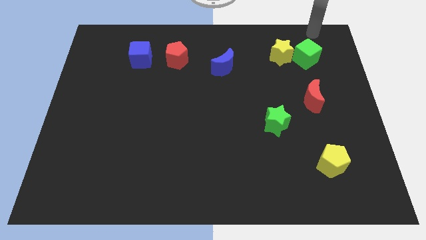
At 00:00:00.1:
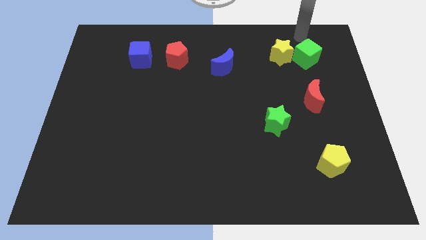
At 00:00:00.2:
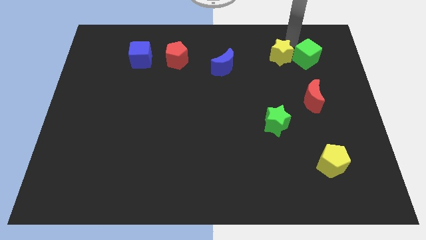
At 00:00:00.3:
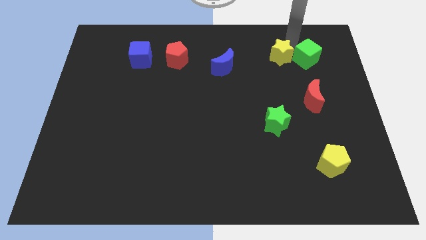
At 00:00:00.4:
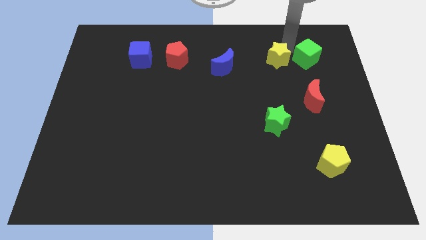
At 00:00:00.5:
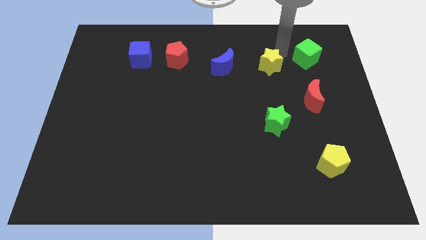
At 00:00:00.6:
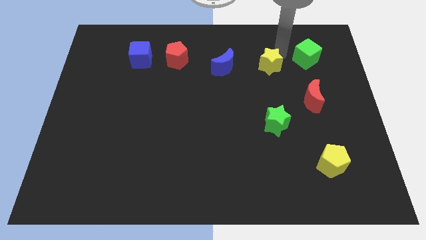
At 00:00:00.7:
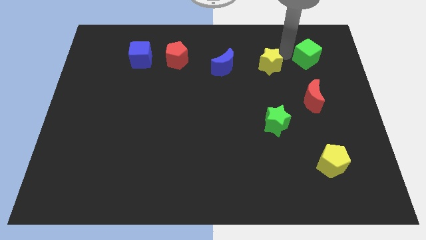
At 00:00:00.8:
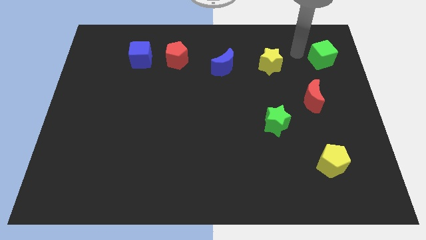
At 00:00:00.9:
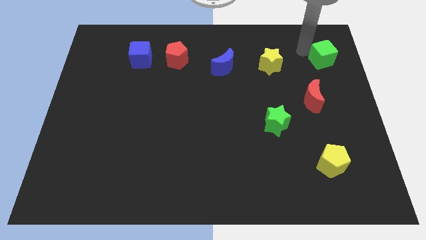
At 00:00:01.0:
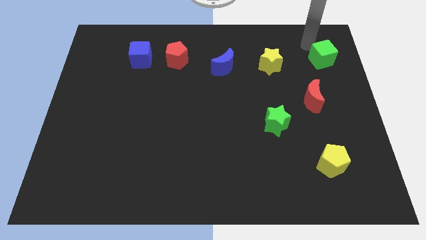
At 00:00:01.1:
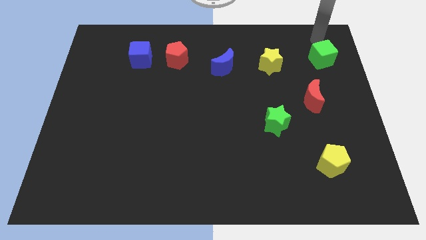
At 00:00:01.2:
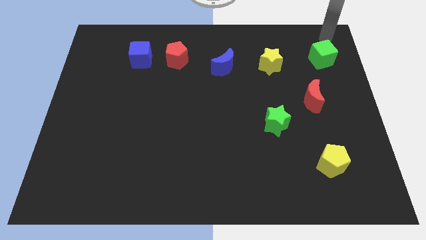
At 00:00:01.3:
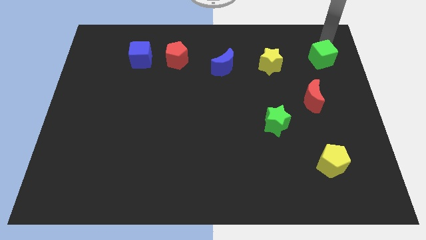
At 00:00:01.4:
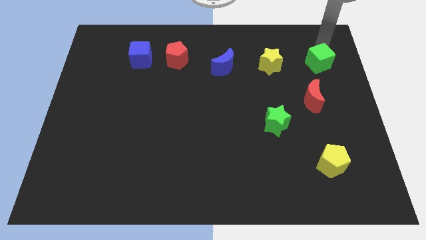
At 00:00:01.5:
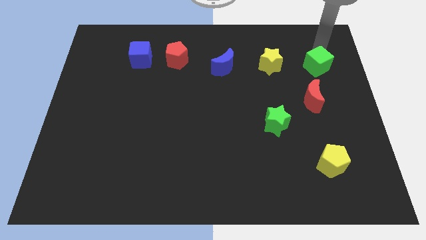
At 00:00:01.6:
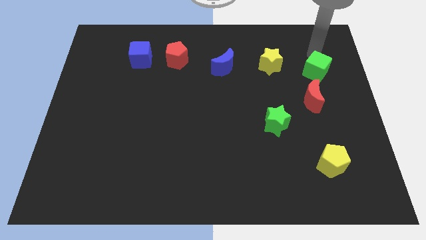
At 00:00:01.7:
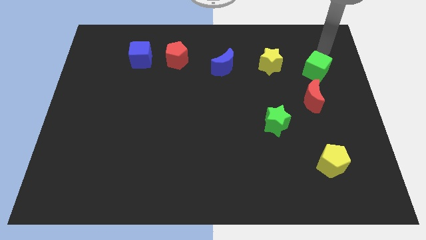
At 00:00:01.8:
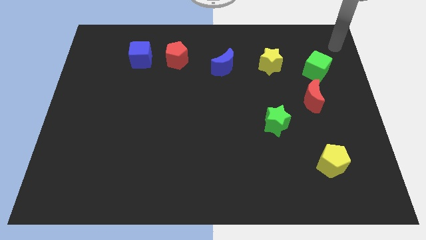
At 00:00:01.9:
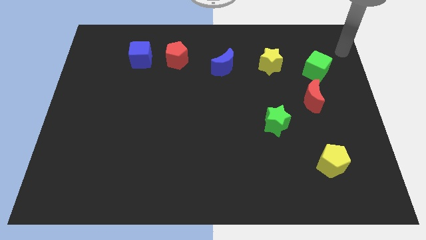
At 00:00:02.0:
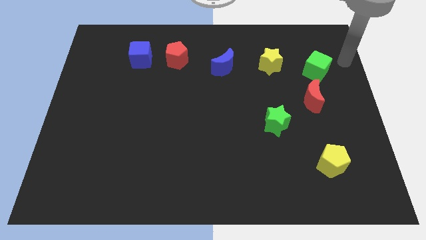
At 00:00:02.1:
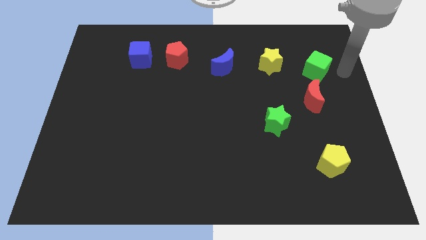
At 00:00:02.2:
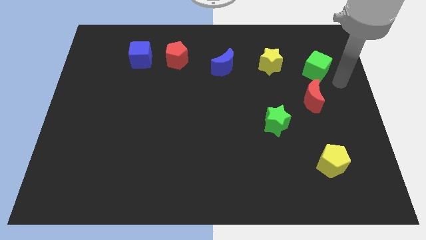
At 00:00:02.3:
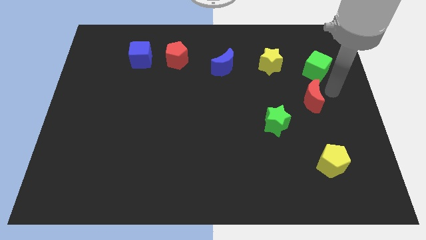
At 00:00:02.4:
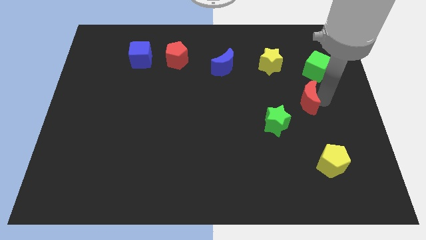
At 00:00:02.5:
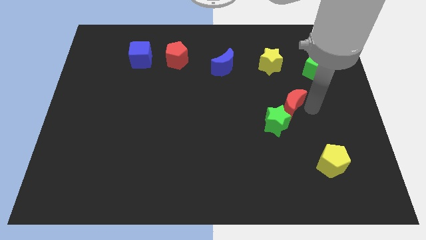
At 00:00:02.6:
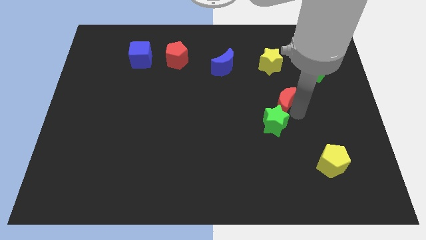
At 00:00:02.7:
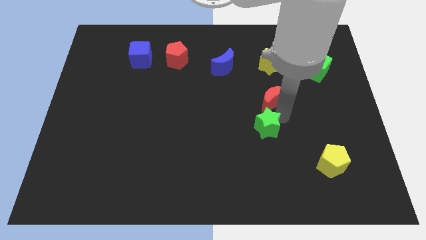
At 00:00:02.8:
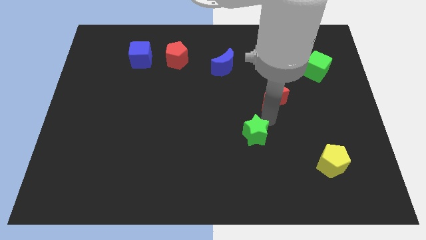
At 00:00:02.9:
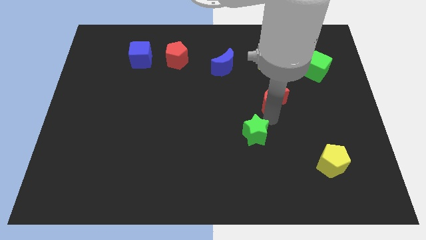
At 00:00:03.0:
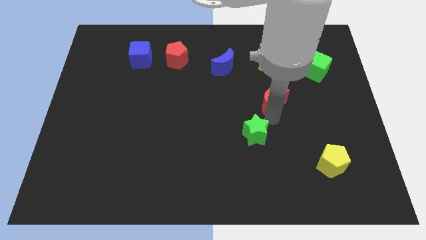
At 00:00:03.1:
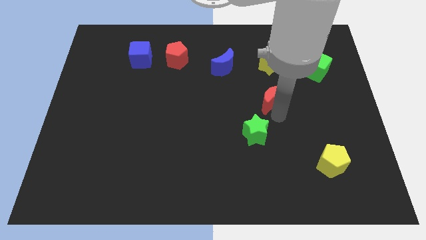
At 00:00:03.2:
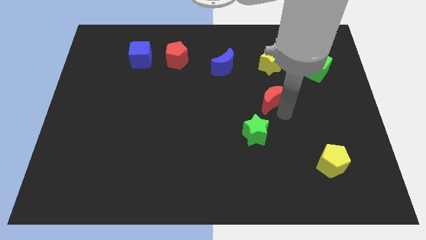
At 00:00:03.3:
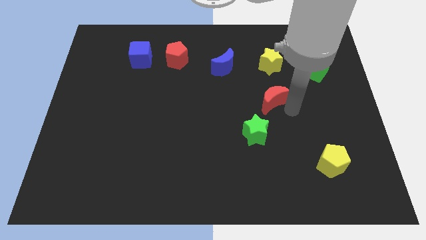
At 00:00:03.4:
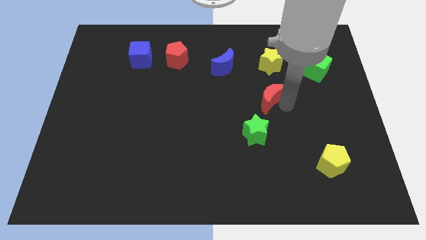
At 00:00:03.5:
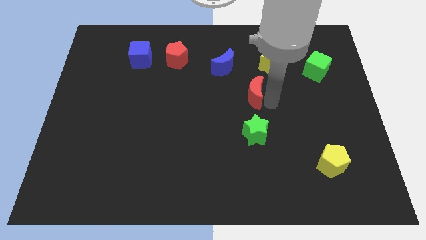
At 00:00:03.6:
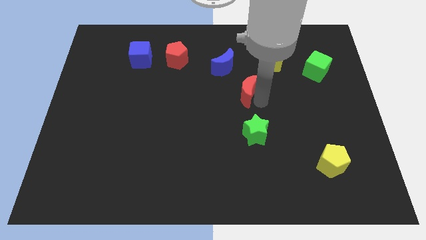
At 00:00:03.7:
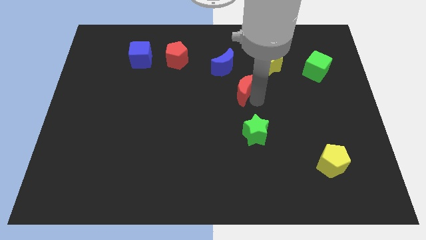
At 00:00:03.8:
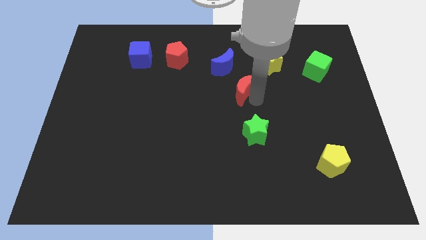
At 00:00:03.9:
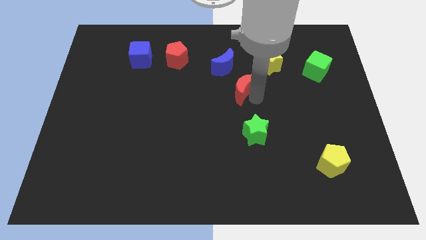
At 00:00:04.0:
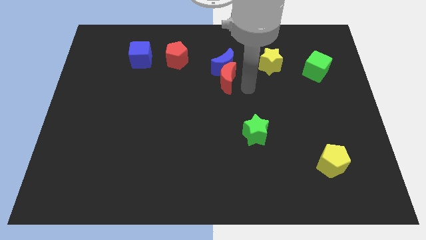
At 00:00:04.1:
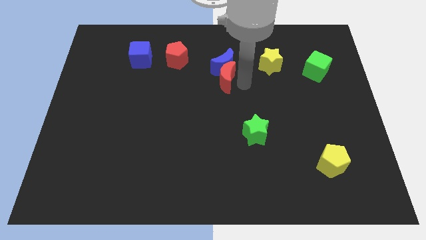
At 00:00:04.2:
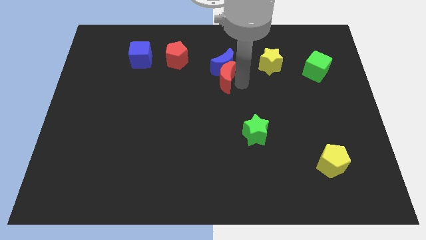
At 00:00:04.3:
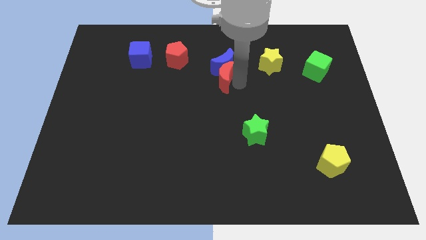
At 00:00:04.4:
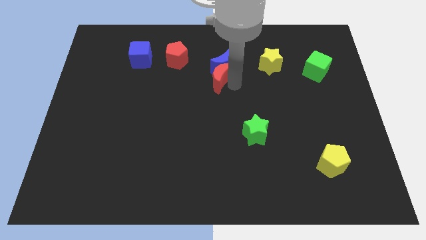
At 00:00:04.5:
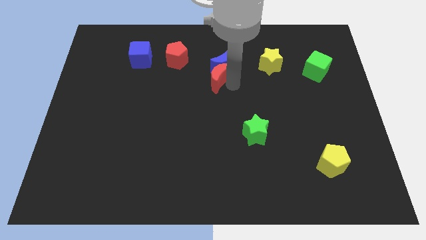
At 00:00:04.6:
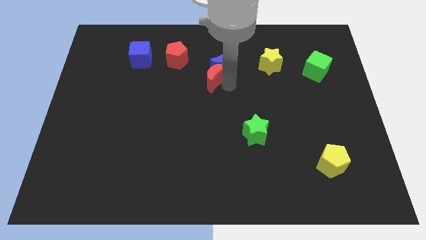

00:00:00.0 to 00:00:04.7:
slide the red moon into the blue crescent

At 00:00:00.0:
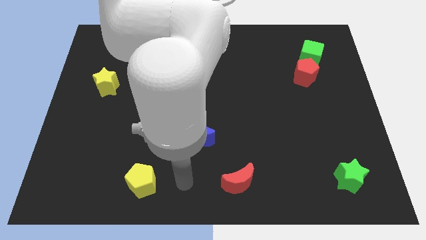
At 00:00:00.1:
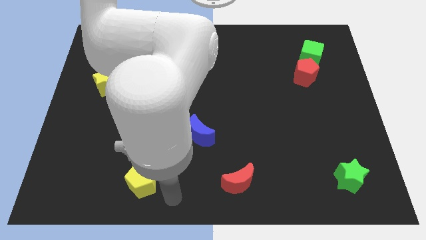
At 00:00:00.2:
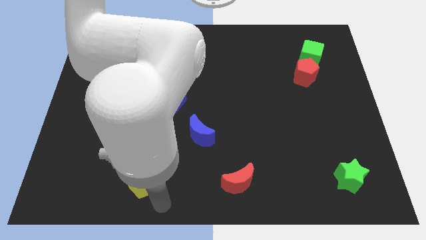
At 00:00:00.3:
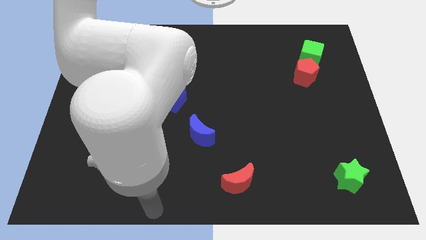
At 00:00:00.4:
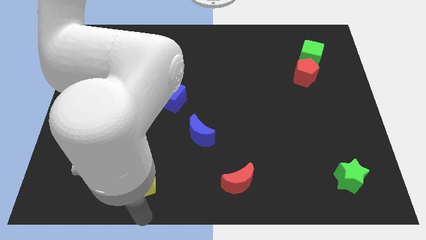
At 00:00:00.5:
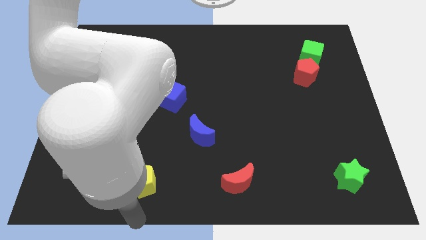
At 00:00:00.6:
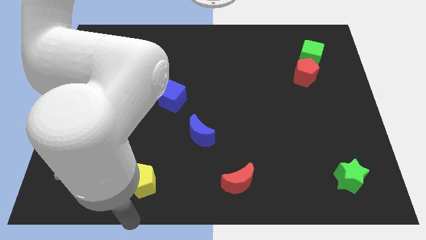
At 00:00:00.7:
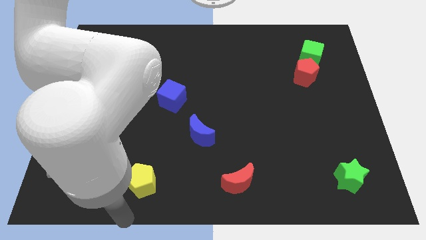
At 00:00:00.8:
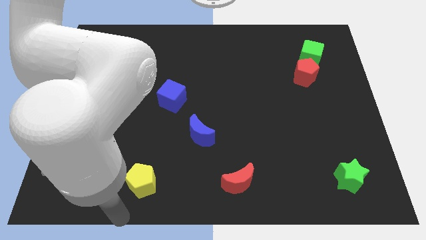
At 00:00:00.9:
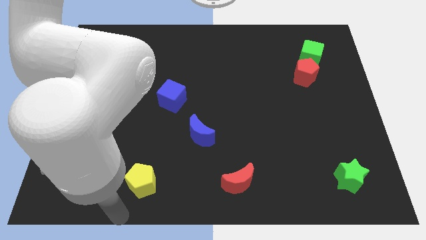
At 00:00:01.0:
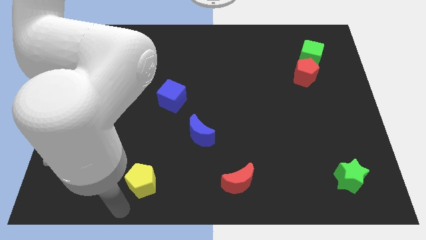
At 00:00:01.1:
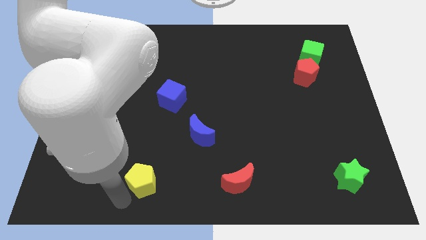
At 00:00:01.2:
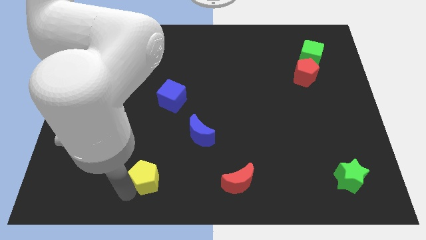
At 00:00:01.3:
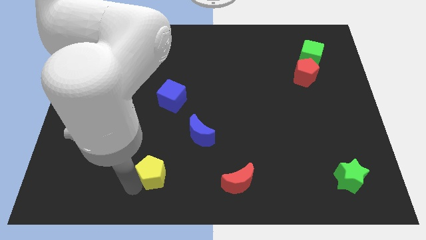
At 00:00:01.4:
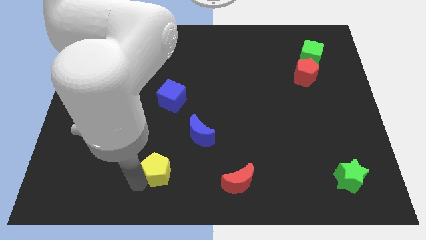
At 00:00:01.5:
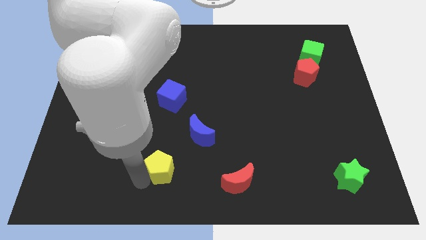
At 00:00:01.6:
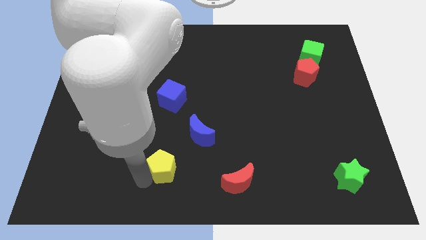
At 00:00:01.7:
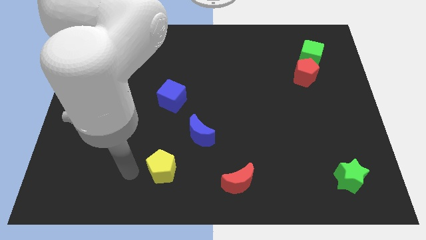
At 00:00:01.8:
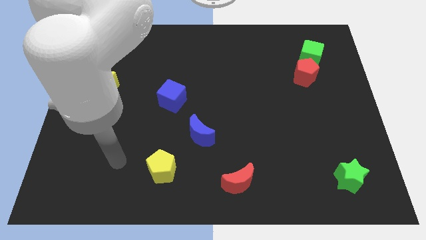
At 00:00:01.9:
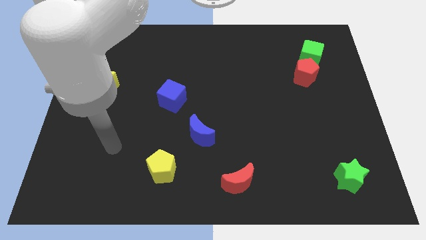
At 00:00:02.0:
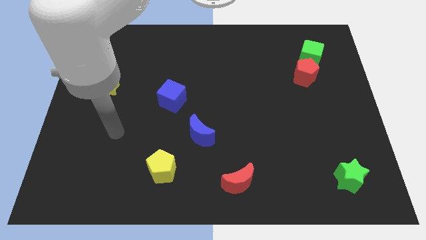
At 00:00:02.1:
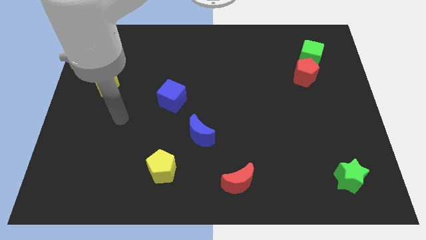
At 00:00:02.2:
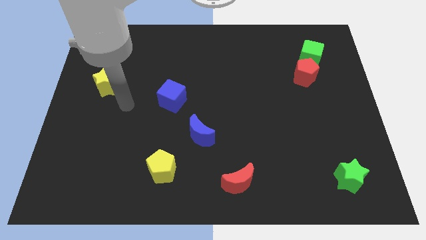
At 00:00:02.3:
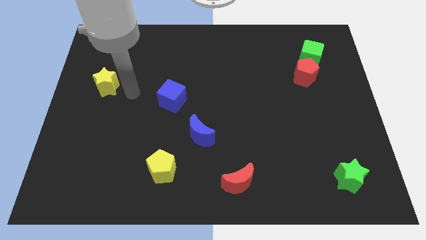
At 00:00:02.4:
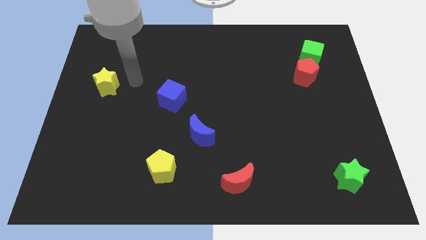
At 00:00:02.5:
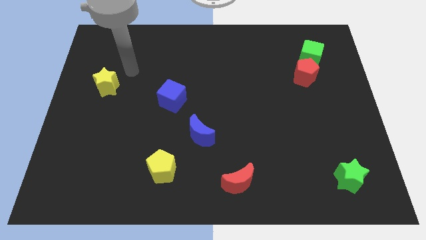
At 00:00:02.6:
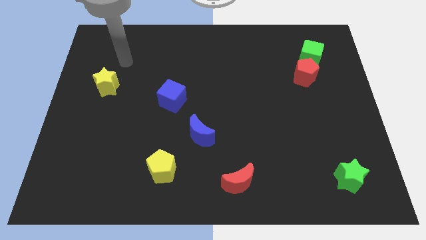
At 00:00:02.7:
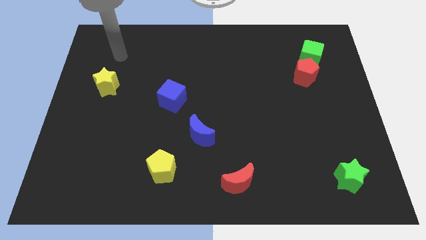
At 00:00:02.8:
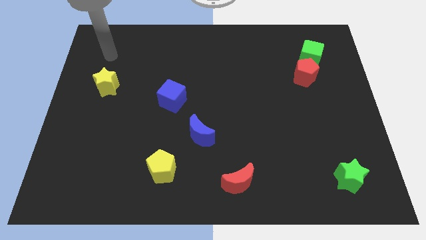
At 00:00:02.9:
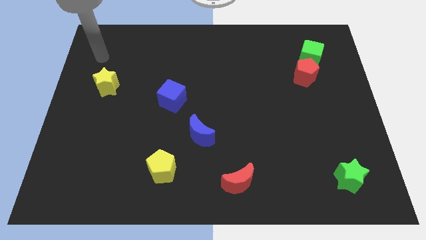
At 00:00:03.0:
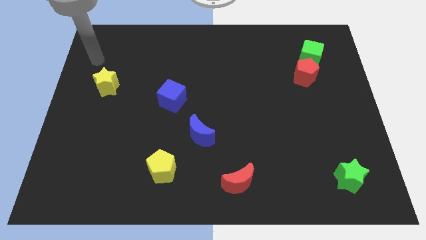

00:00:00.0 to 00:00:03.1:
push yellow pentagon diagonally upwards

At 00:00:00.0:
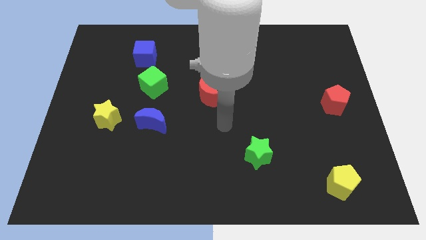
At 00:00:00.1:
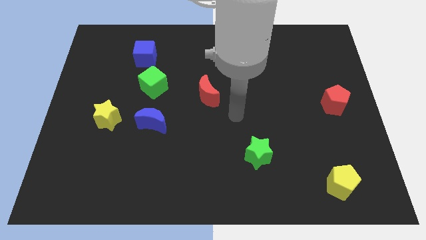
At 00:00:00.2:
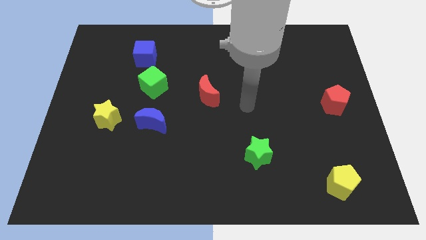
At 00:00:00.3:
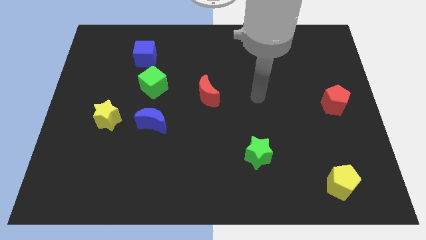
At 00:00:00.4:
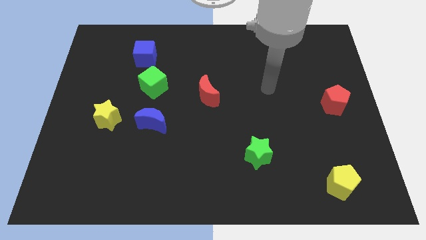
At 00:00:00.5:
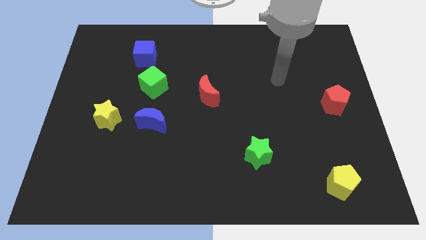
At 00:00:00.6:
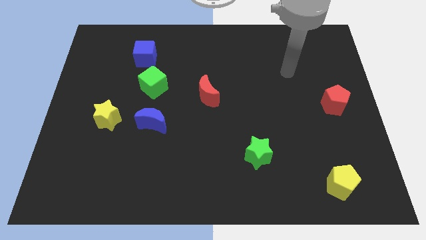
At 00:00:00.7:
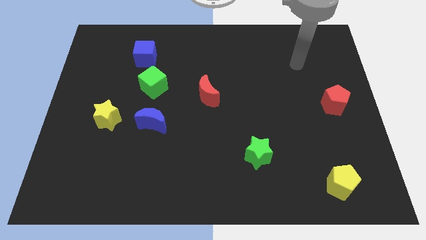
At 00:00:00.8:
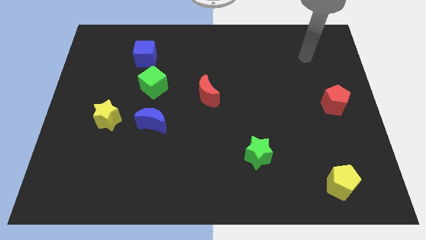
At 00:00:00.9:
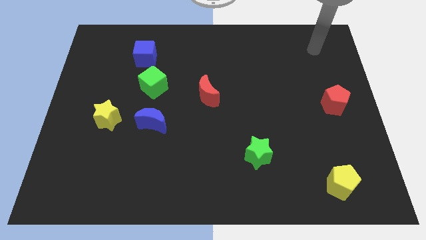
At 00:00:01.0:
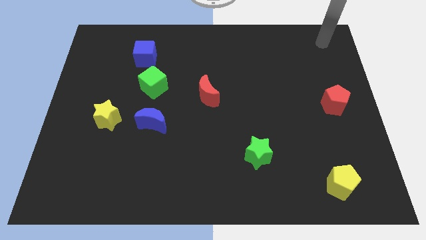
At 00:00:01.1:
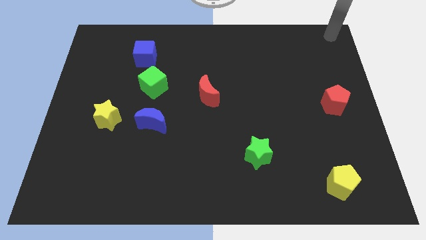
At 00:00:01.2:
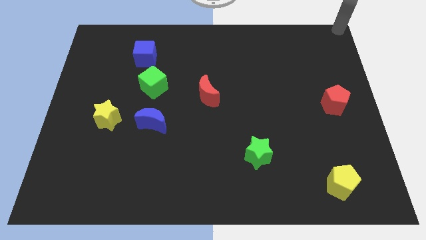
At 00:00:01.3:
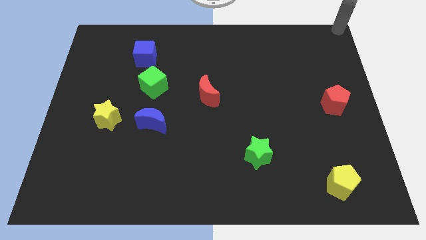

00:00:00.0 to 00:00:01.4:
move arm to the top right corner
